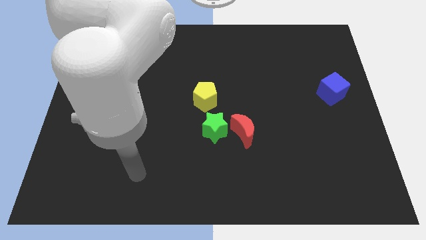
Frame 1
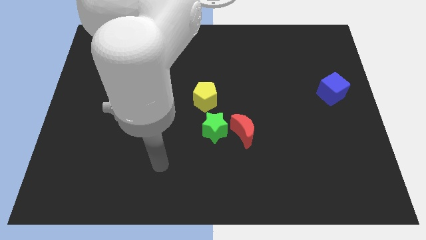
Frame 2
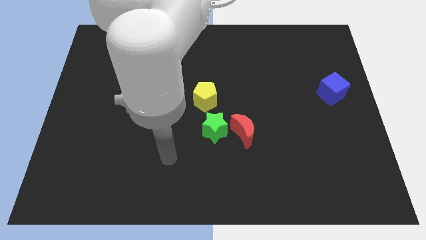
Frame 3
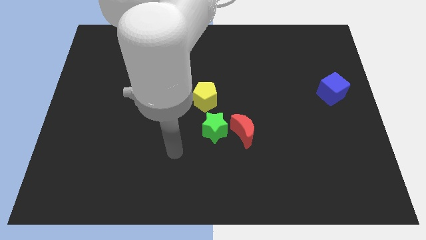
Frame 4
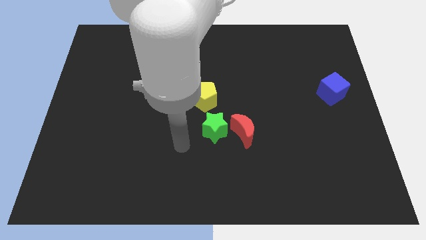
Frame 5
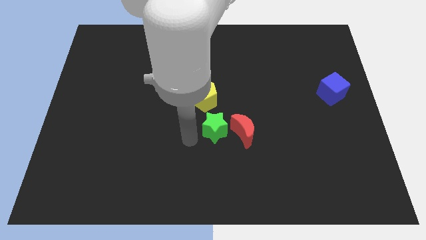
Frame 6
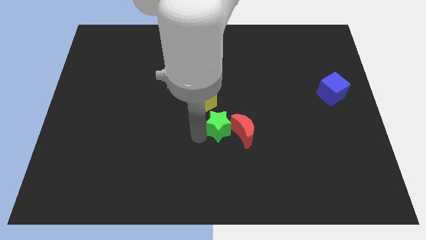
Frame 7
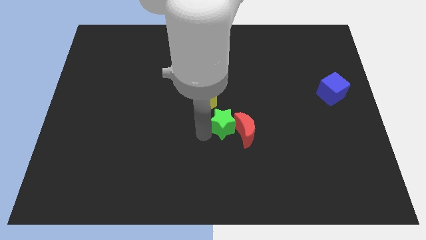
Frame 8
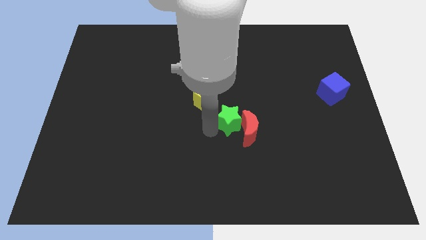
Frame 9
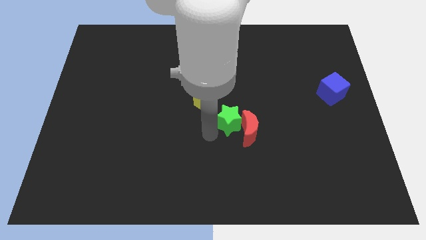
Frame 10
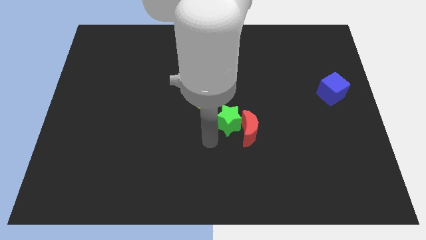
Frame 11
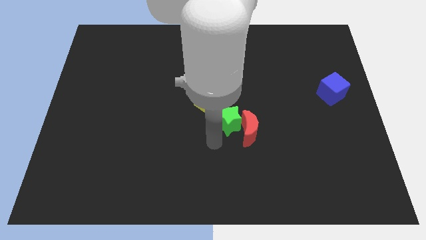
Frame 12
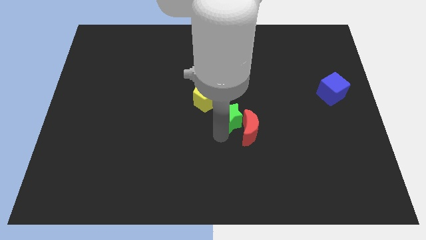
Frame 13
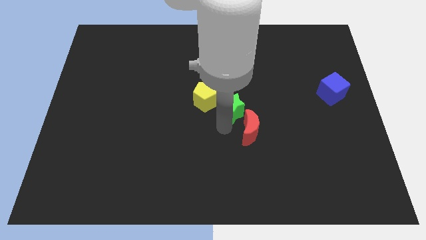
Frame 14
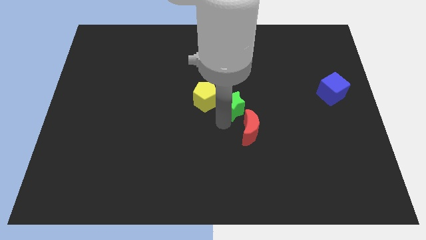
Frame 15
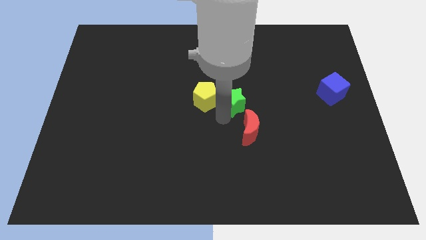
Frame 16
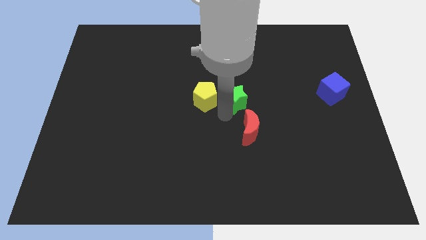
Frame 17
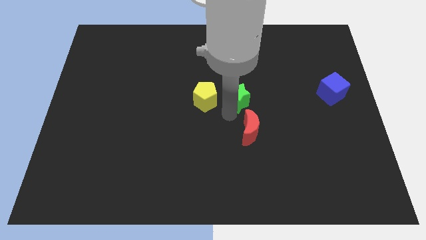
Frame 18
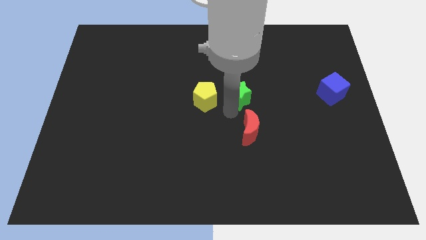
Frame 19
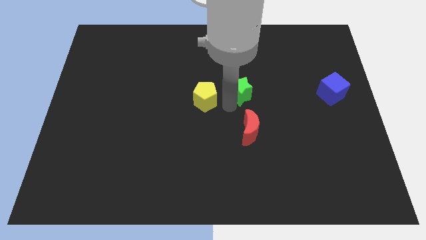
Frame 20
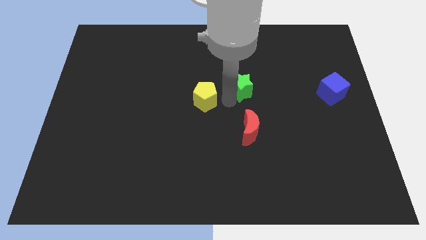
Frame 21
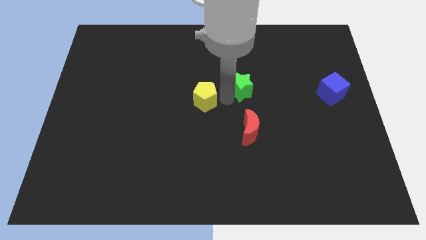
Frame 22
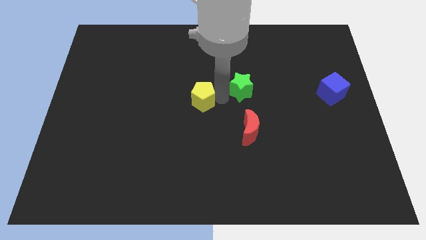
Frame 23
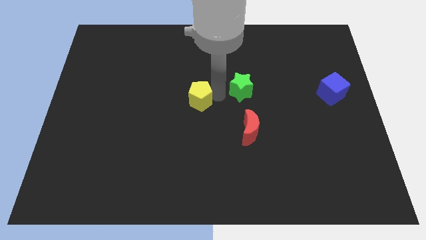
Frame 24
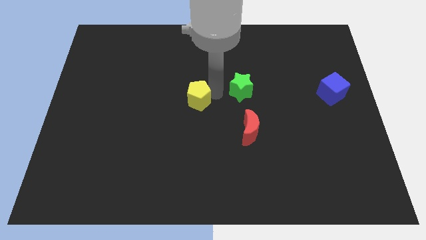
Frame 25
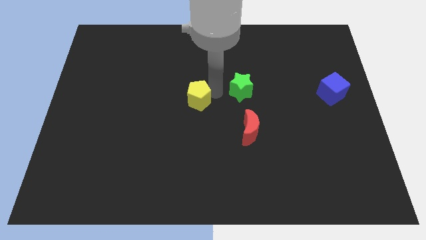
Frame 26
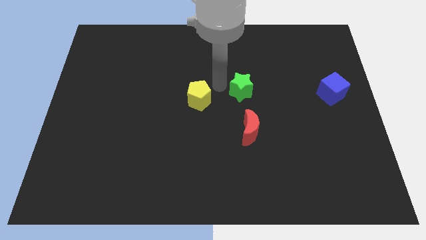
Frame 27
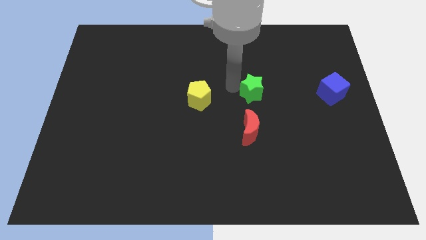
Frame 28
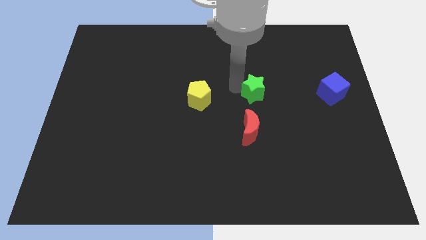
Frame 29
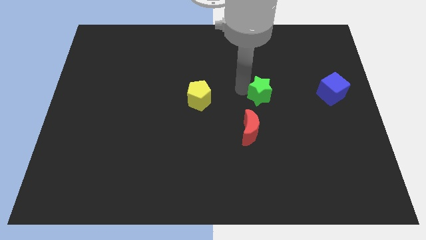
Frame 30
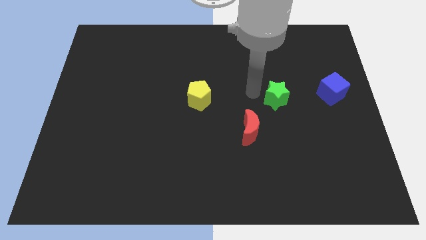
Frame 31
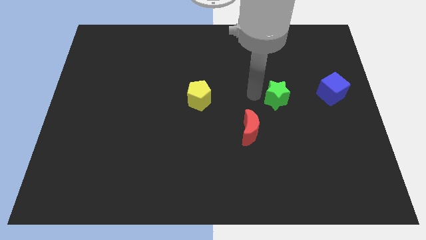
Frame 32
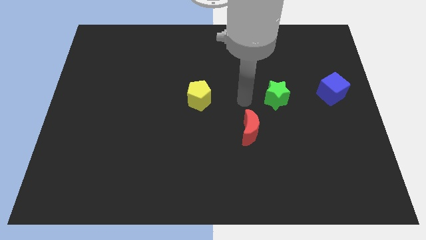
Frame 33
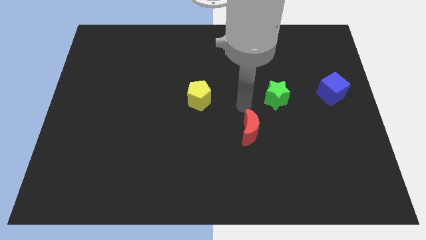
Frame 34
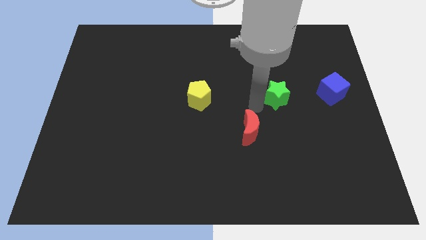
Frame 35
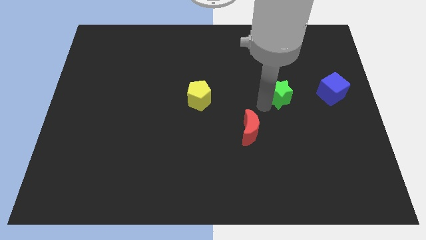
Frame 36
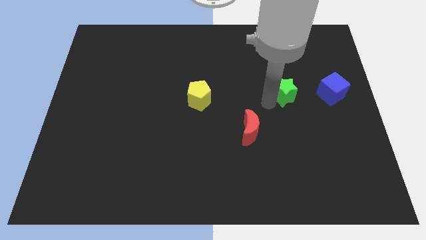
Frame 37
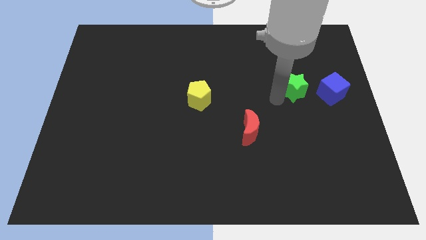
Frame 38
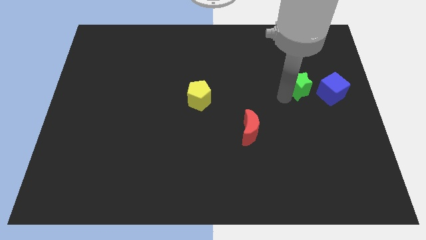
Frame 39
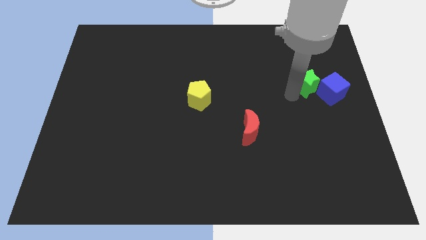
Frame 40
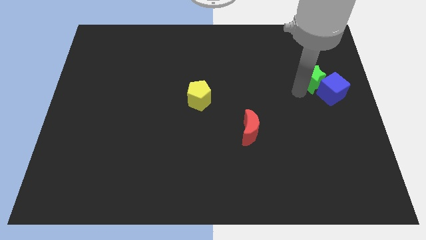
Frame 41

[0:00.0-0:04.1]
slide the star next to the blue block

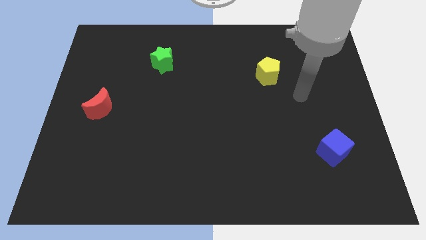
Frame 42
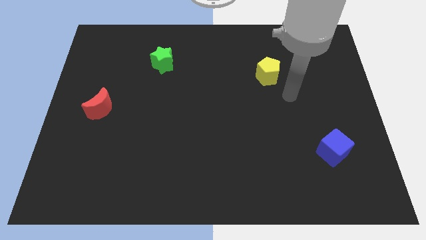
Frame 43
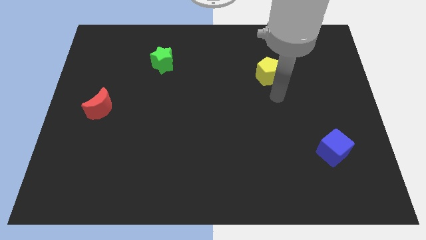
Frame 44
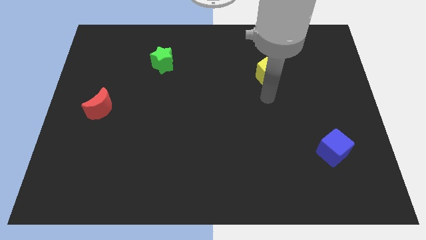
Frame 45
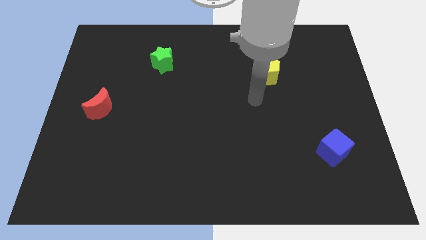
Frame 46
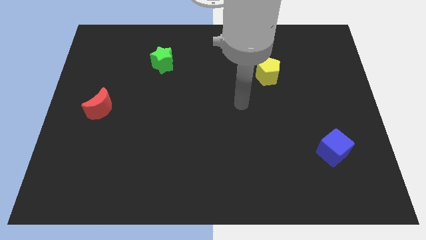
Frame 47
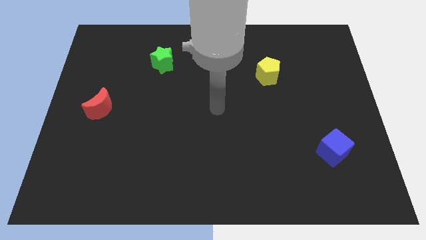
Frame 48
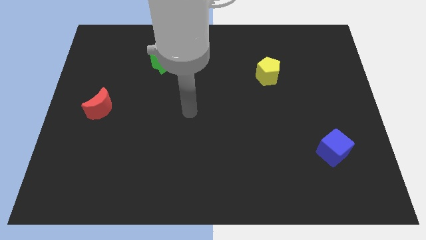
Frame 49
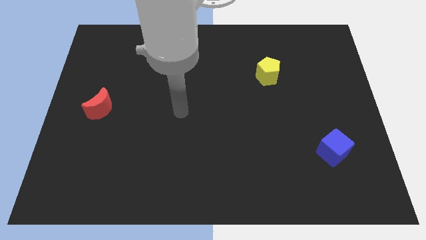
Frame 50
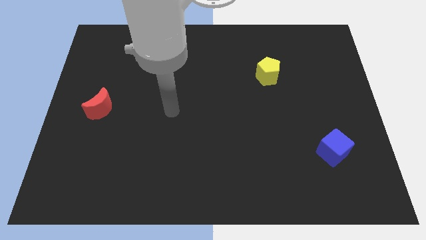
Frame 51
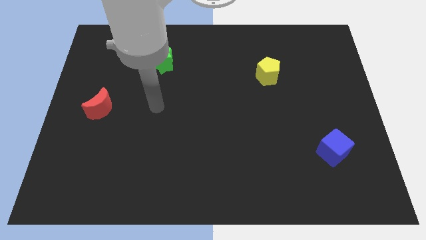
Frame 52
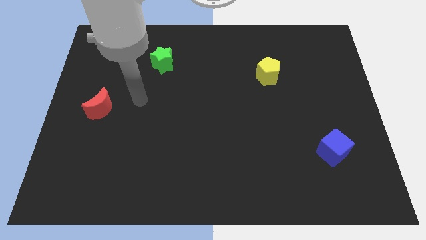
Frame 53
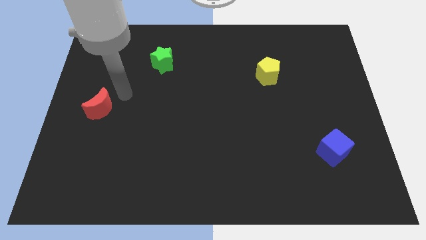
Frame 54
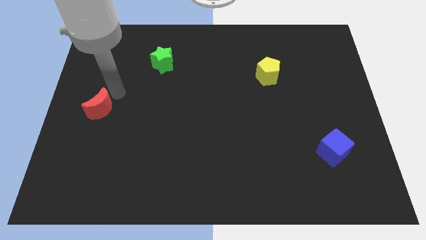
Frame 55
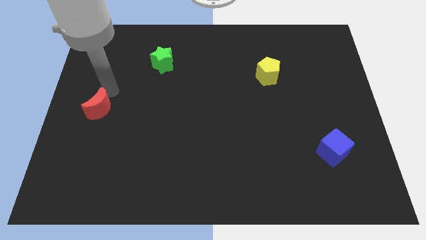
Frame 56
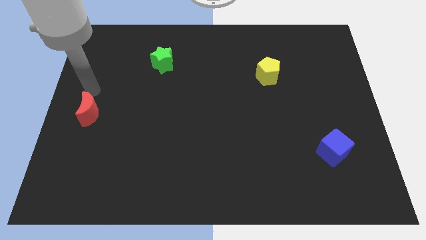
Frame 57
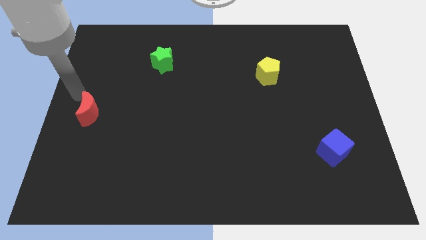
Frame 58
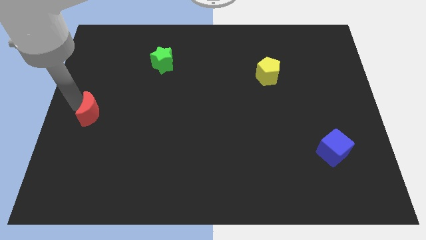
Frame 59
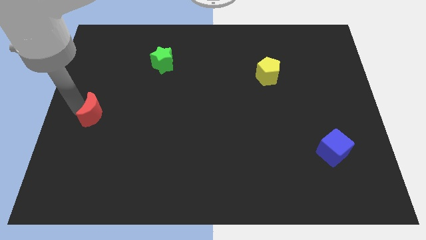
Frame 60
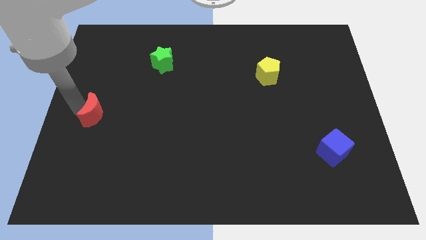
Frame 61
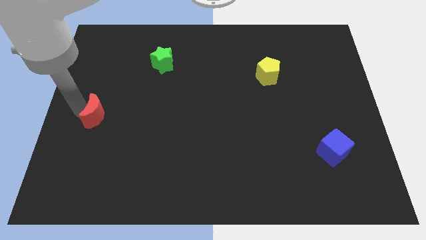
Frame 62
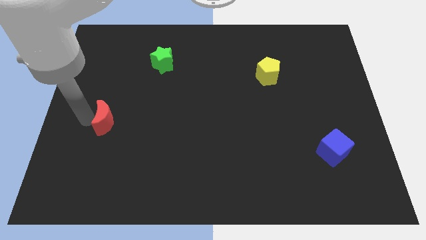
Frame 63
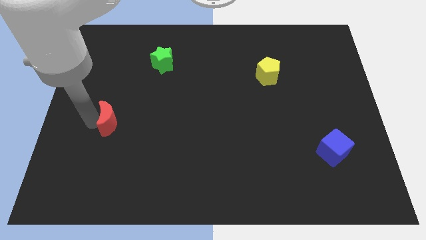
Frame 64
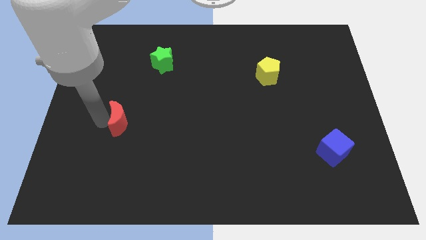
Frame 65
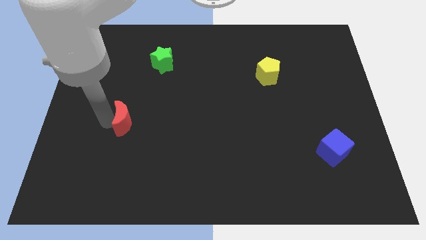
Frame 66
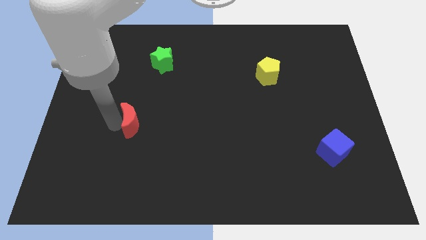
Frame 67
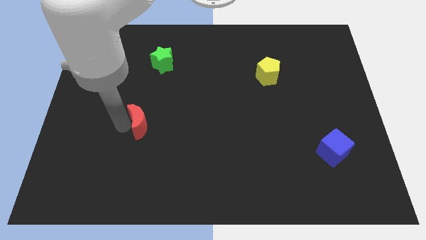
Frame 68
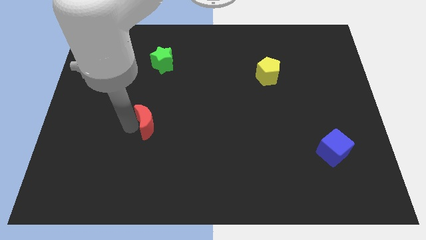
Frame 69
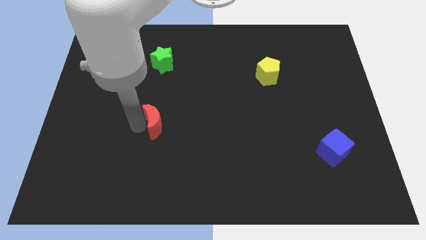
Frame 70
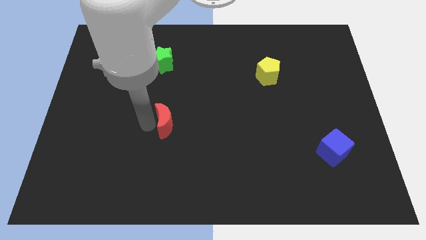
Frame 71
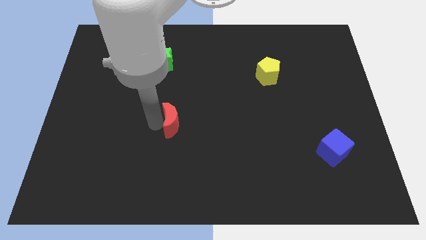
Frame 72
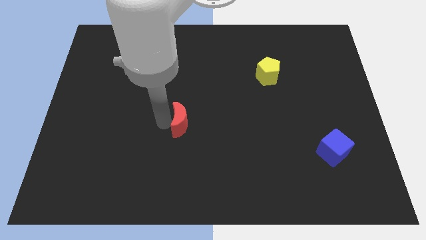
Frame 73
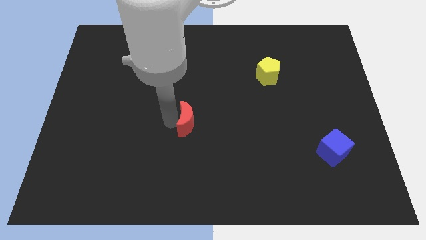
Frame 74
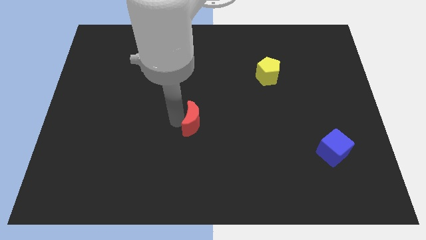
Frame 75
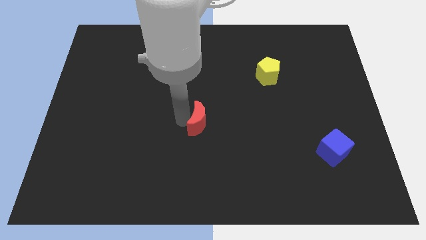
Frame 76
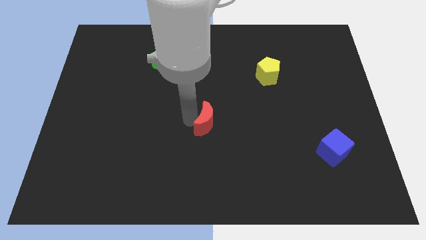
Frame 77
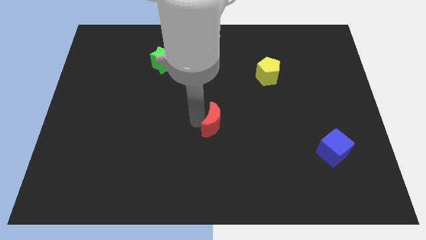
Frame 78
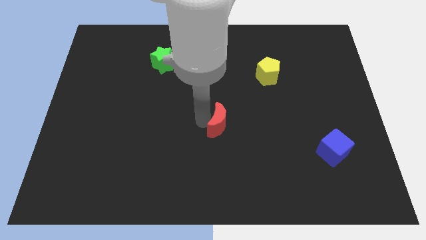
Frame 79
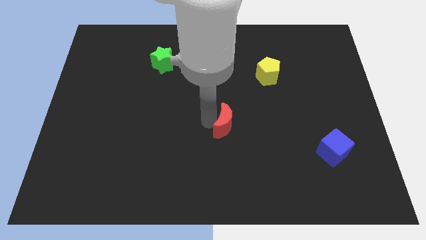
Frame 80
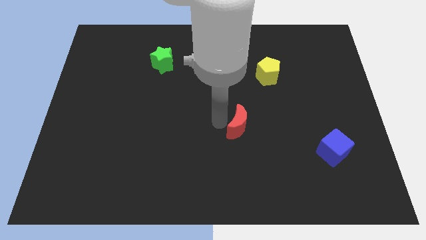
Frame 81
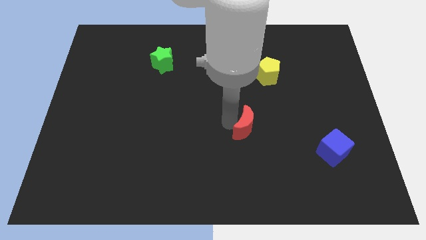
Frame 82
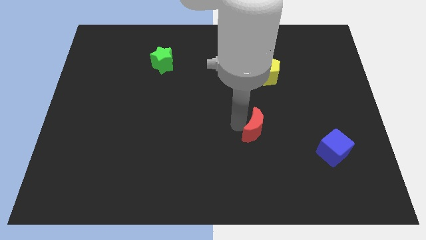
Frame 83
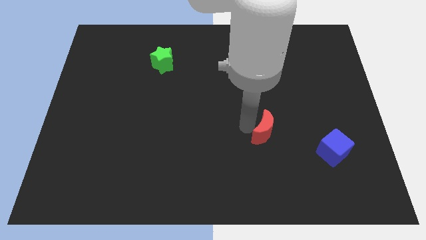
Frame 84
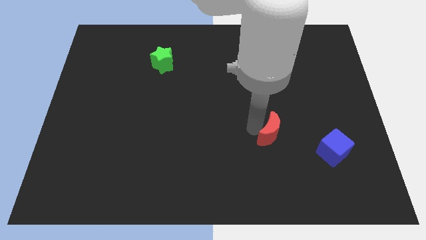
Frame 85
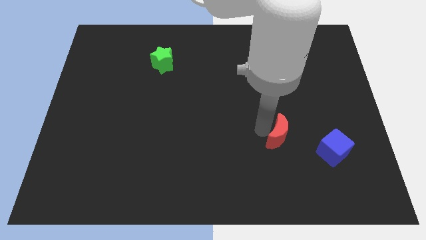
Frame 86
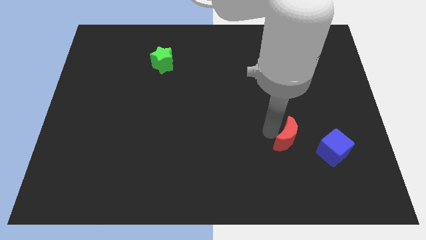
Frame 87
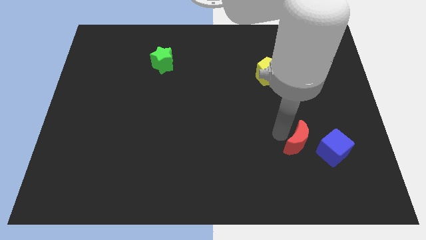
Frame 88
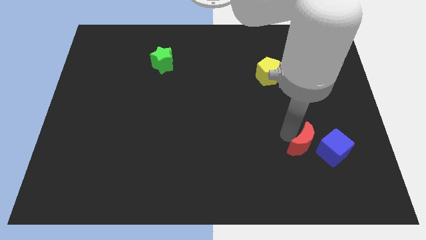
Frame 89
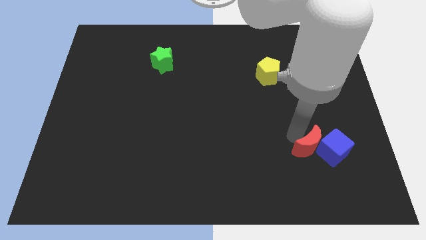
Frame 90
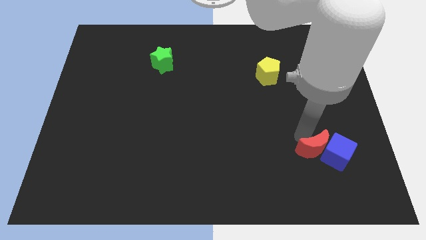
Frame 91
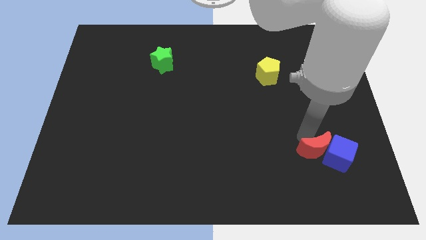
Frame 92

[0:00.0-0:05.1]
move the moon next to the cube
